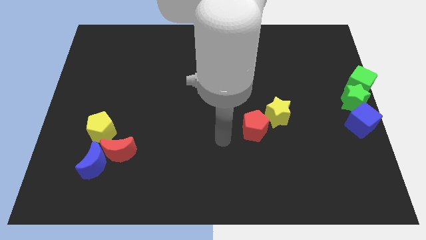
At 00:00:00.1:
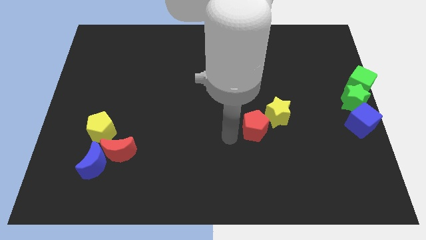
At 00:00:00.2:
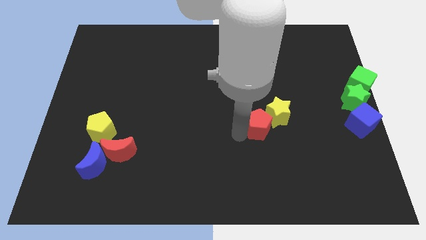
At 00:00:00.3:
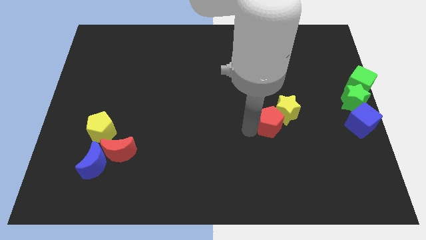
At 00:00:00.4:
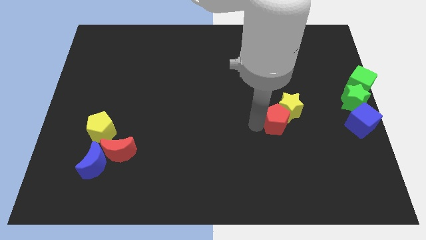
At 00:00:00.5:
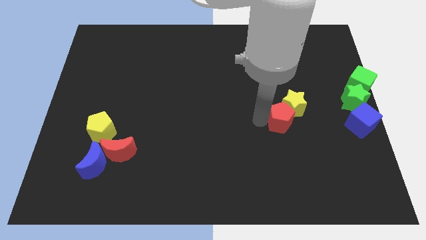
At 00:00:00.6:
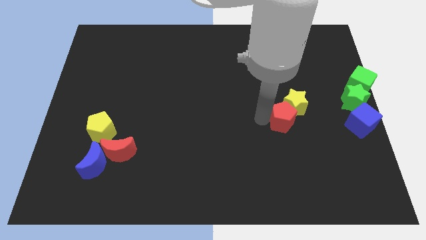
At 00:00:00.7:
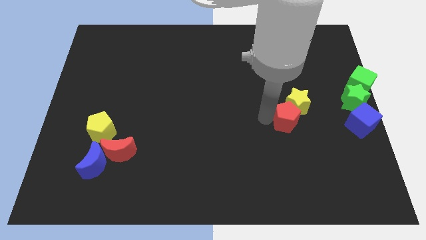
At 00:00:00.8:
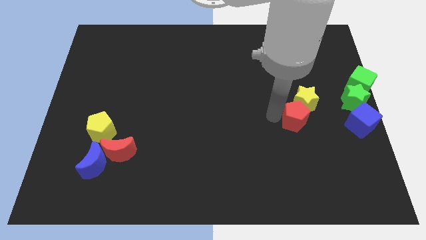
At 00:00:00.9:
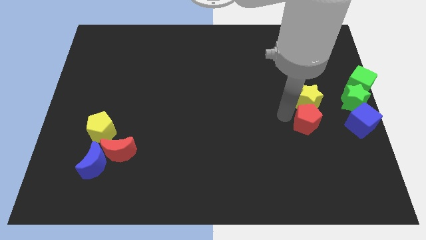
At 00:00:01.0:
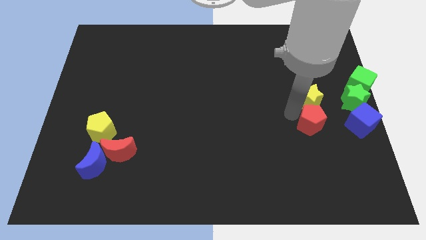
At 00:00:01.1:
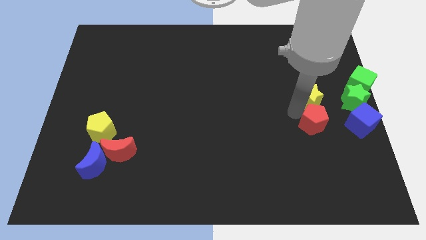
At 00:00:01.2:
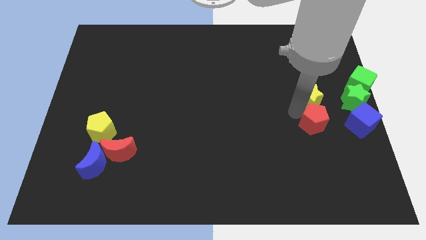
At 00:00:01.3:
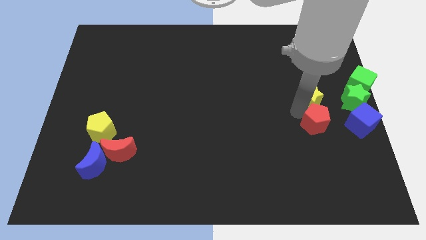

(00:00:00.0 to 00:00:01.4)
drag red pentagon to the bottom of yellow star

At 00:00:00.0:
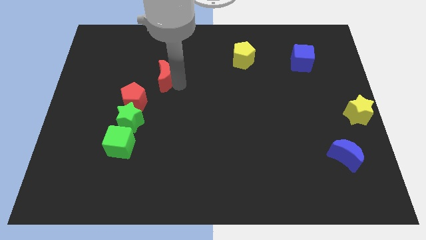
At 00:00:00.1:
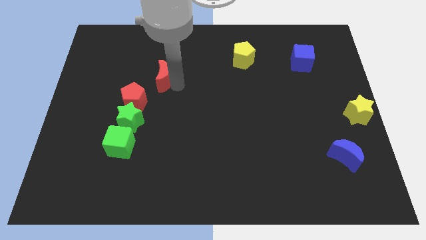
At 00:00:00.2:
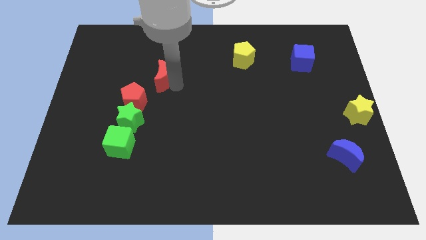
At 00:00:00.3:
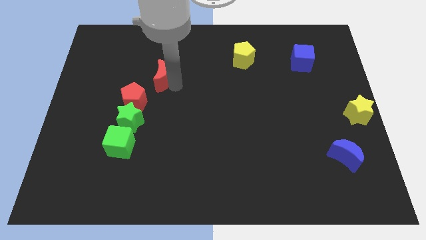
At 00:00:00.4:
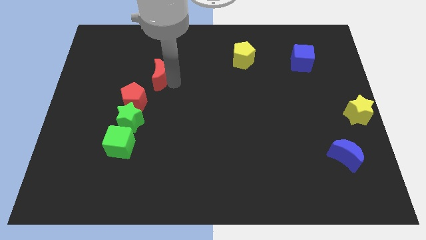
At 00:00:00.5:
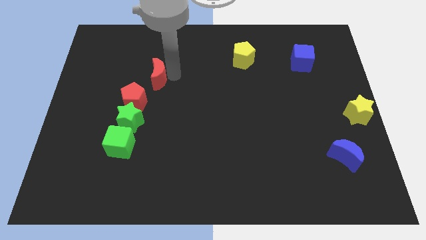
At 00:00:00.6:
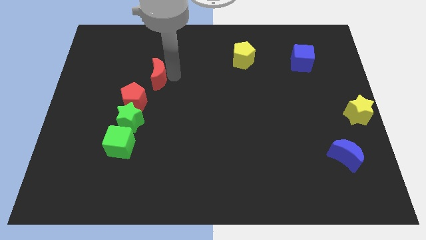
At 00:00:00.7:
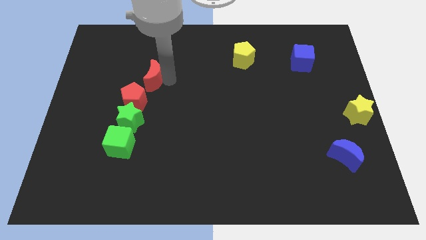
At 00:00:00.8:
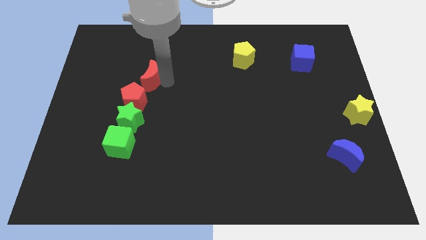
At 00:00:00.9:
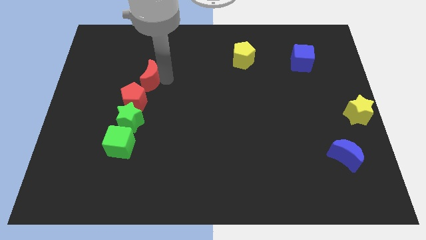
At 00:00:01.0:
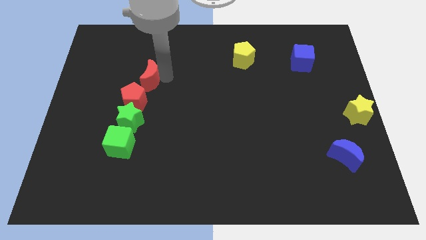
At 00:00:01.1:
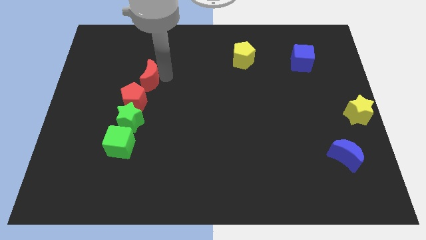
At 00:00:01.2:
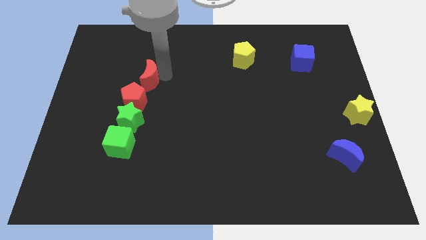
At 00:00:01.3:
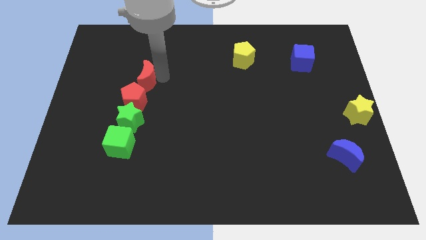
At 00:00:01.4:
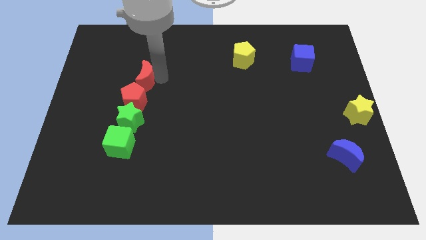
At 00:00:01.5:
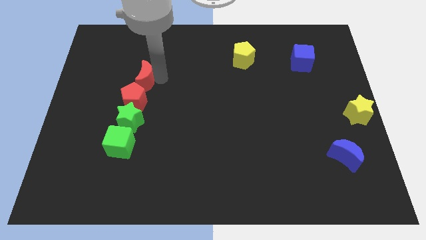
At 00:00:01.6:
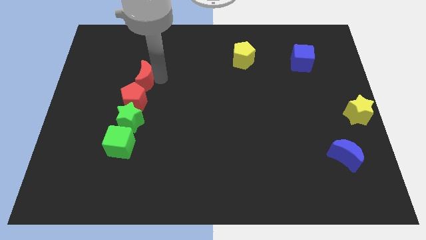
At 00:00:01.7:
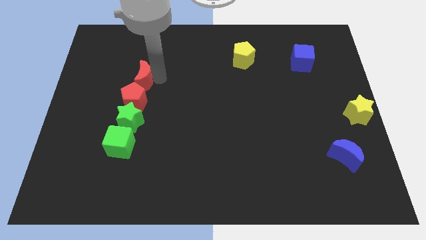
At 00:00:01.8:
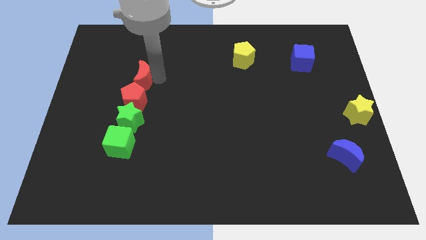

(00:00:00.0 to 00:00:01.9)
move the red crescent to the top of the red pentagon

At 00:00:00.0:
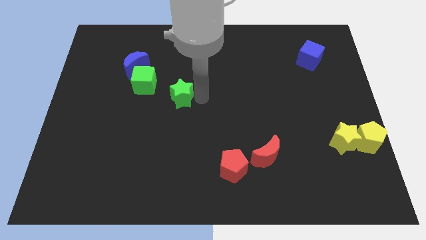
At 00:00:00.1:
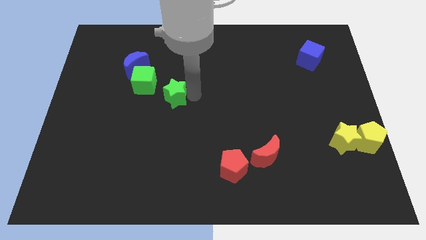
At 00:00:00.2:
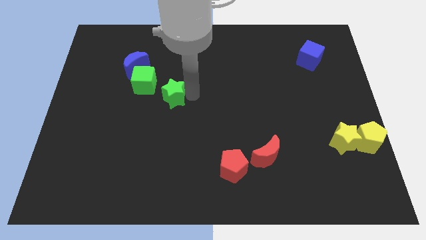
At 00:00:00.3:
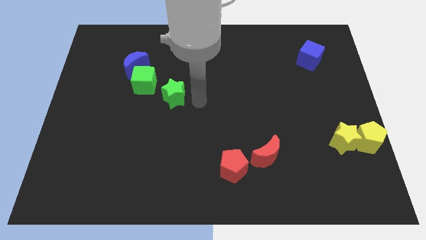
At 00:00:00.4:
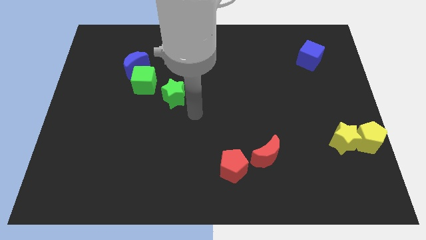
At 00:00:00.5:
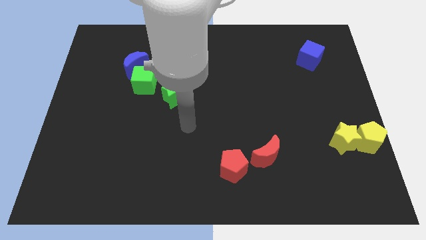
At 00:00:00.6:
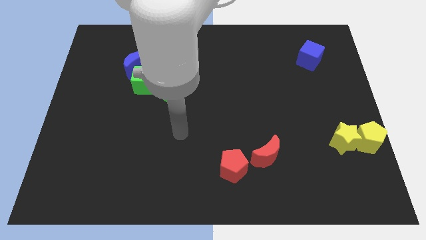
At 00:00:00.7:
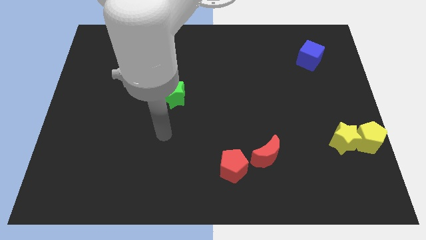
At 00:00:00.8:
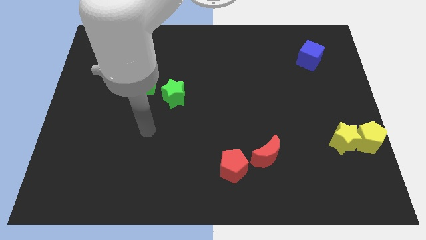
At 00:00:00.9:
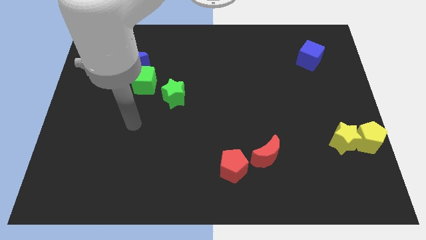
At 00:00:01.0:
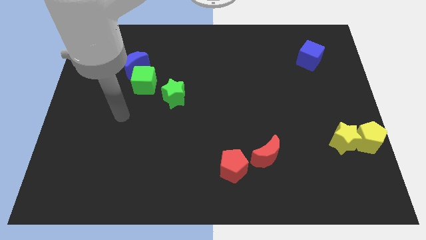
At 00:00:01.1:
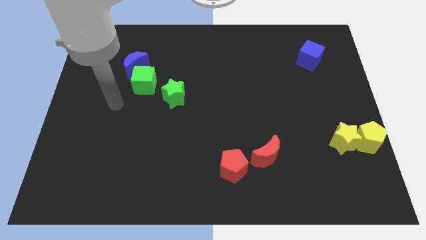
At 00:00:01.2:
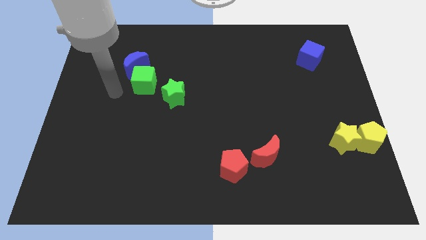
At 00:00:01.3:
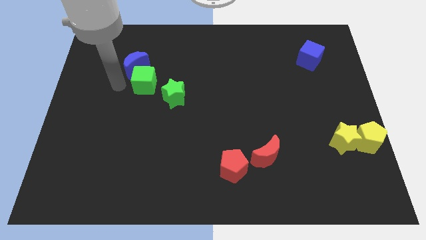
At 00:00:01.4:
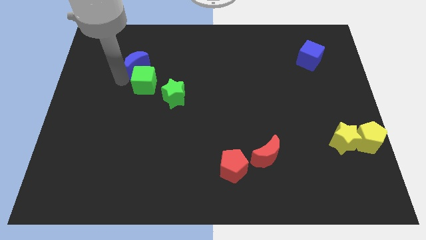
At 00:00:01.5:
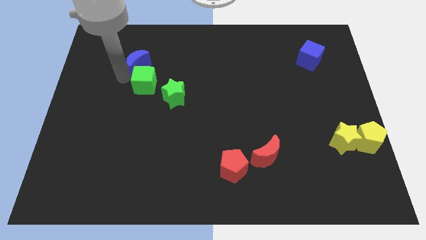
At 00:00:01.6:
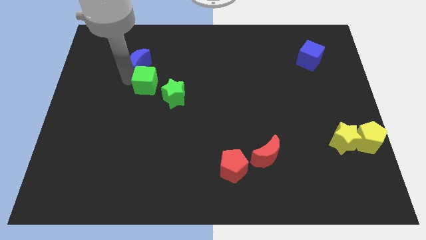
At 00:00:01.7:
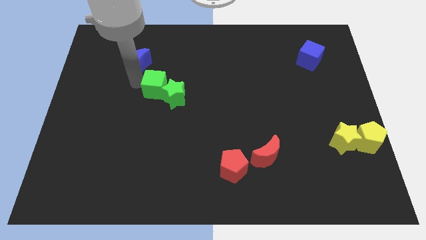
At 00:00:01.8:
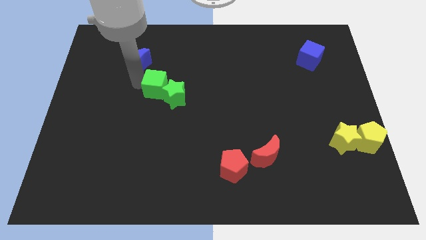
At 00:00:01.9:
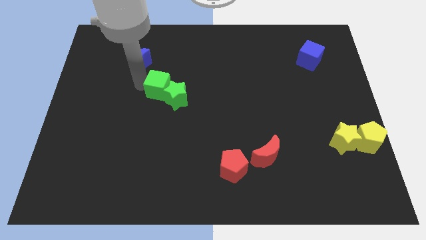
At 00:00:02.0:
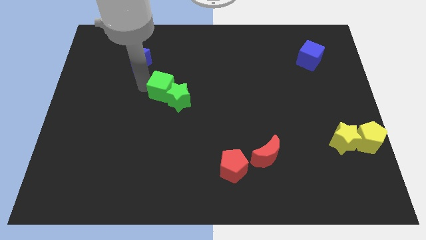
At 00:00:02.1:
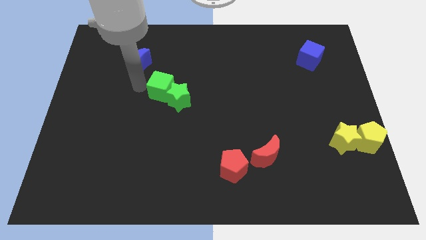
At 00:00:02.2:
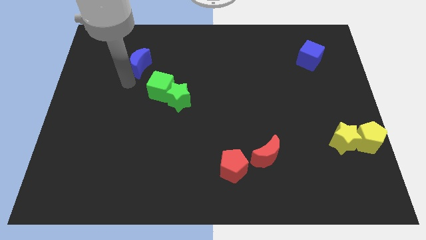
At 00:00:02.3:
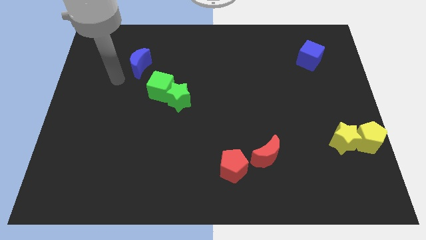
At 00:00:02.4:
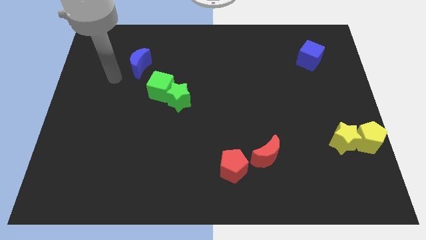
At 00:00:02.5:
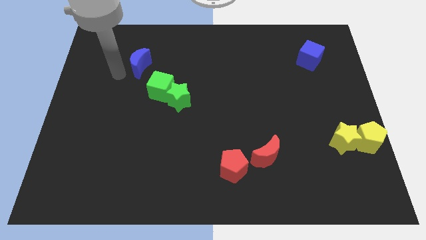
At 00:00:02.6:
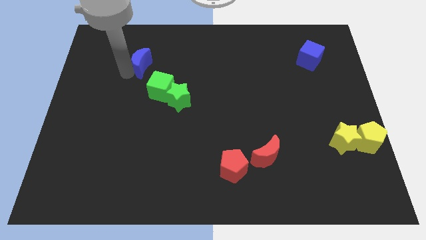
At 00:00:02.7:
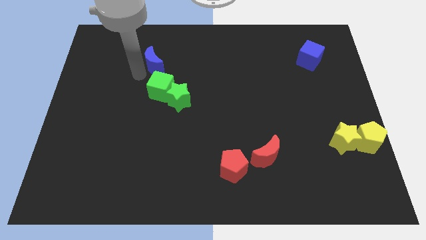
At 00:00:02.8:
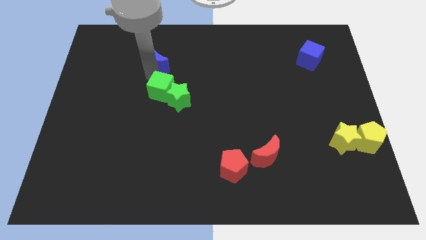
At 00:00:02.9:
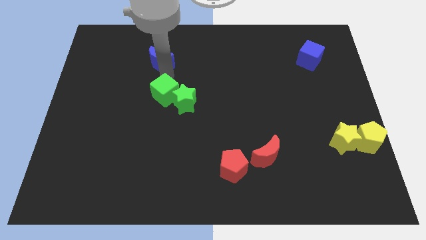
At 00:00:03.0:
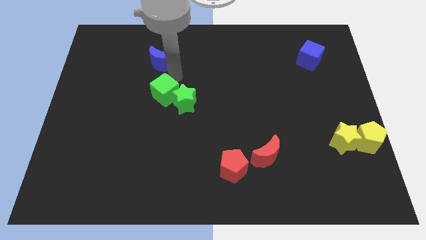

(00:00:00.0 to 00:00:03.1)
place the green cube diagonal to the green star from the top left side

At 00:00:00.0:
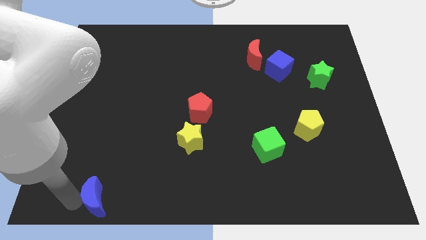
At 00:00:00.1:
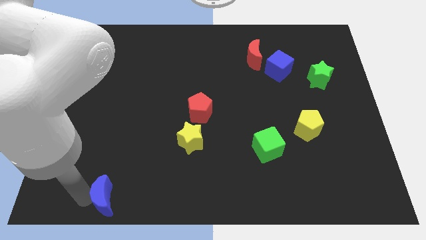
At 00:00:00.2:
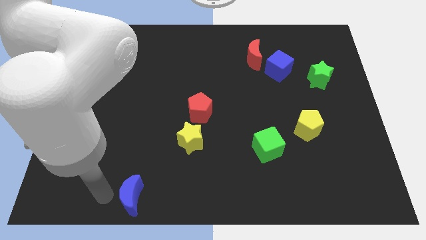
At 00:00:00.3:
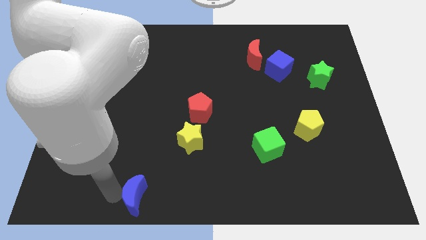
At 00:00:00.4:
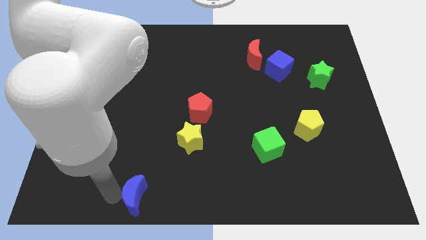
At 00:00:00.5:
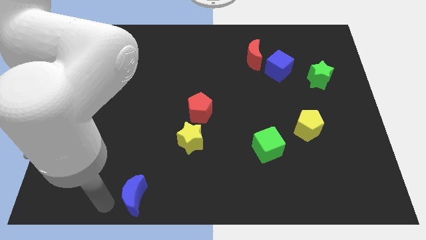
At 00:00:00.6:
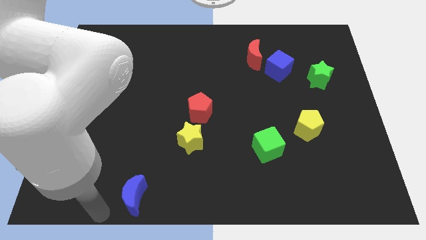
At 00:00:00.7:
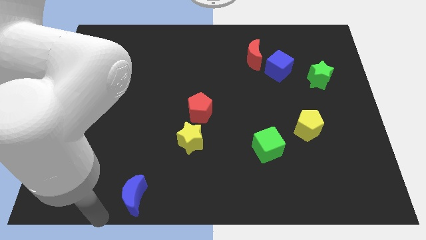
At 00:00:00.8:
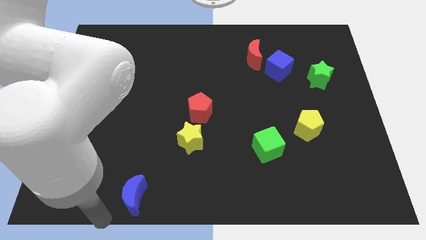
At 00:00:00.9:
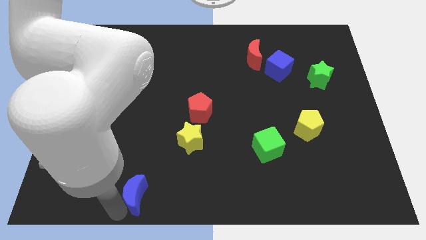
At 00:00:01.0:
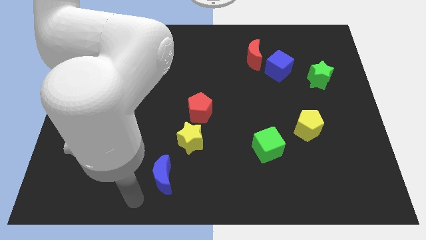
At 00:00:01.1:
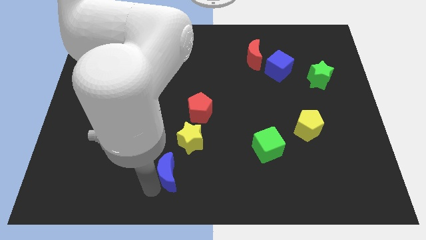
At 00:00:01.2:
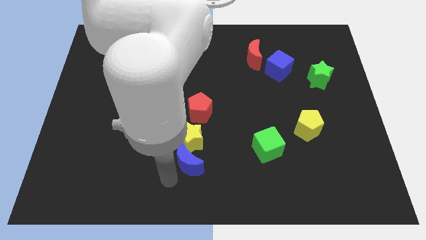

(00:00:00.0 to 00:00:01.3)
place the blue moon below the yellow star

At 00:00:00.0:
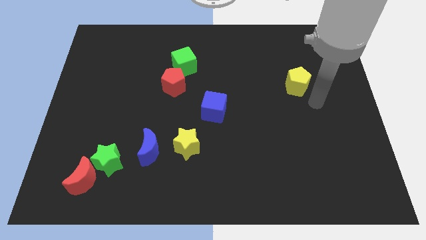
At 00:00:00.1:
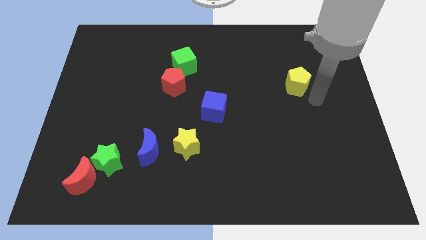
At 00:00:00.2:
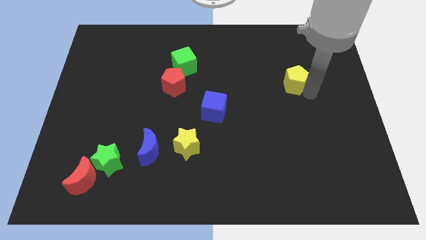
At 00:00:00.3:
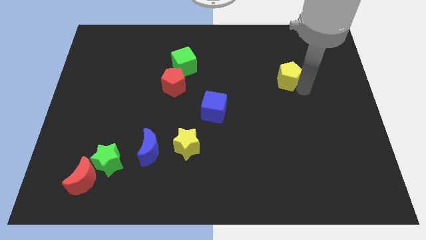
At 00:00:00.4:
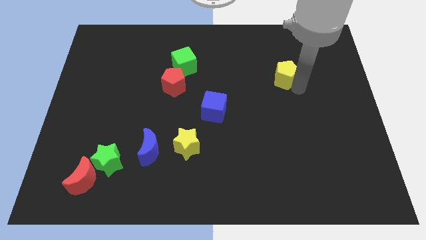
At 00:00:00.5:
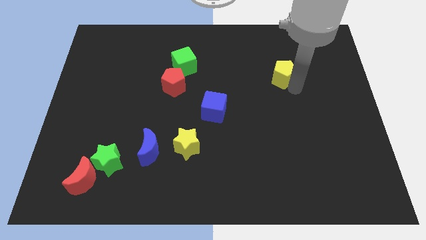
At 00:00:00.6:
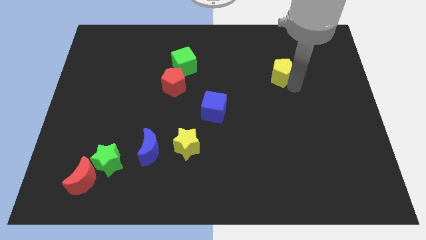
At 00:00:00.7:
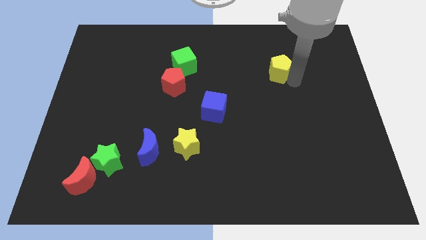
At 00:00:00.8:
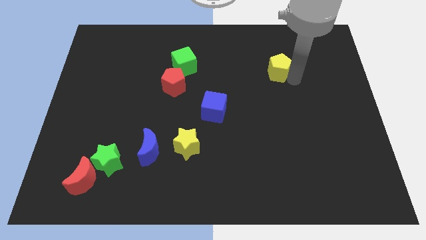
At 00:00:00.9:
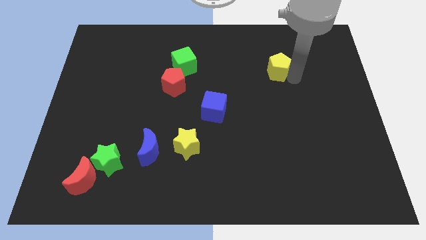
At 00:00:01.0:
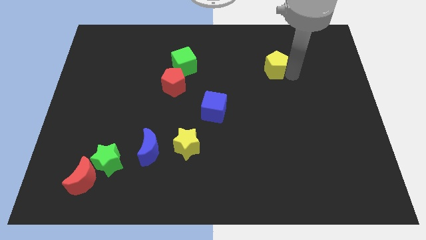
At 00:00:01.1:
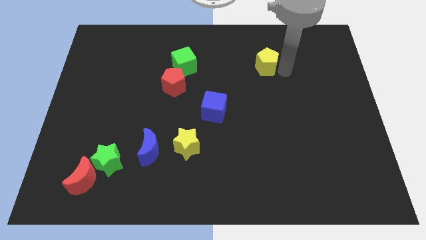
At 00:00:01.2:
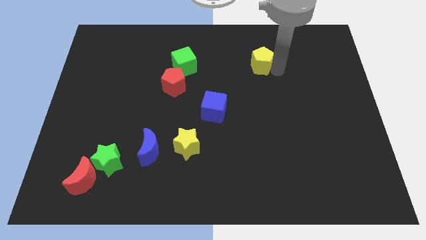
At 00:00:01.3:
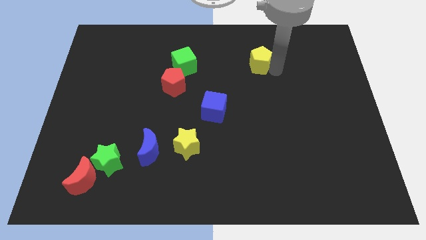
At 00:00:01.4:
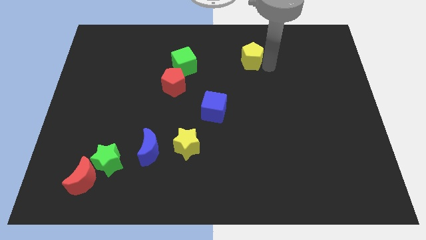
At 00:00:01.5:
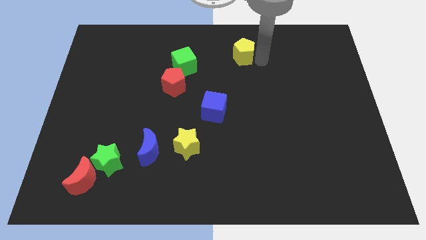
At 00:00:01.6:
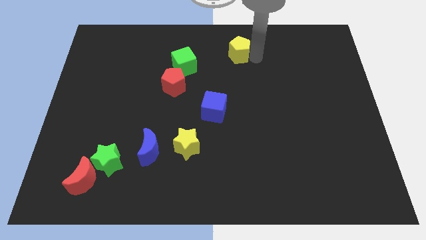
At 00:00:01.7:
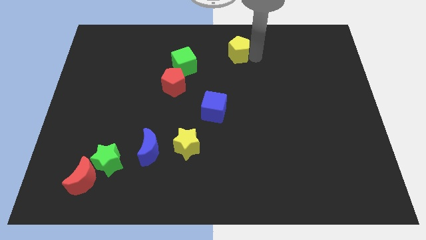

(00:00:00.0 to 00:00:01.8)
move the yellow pentagon to the top center of the board
